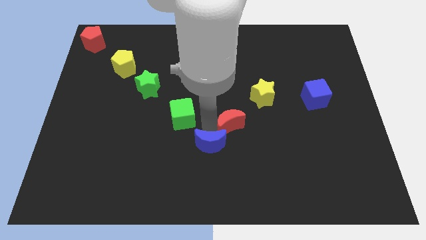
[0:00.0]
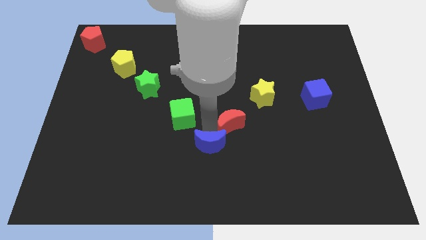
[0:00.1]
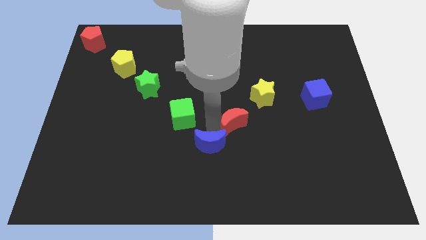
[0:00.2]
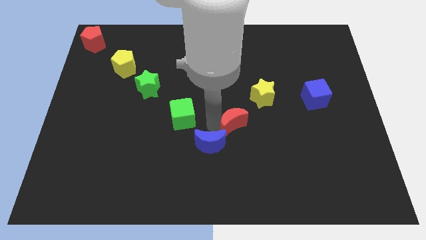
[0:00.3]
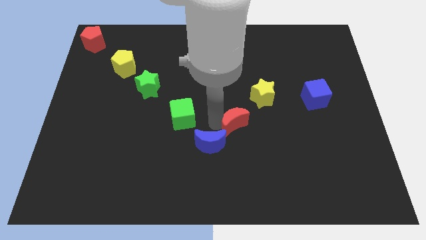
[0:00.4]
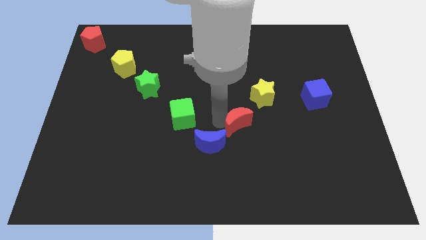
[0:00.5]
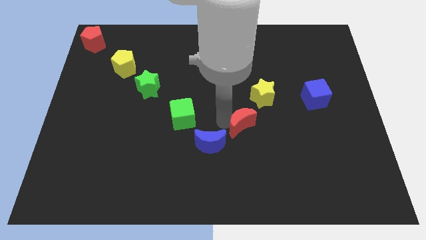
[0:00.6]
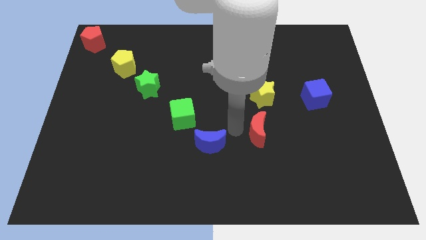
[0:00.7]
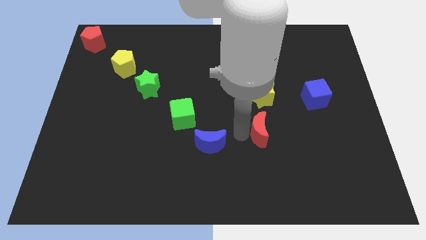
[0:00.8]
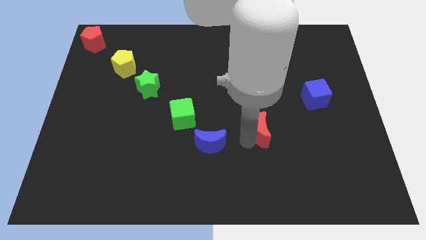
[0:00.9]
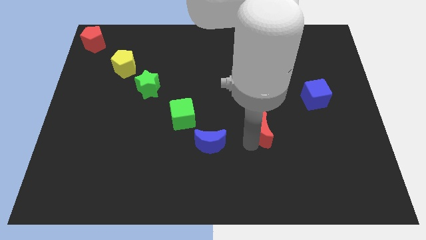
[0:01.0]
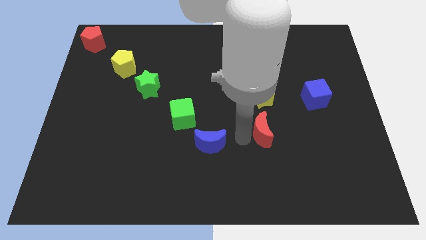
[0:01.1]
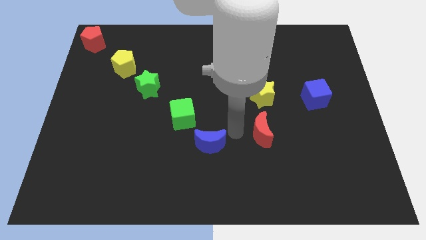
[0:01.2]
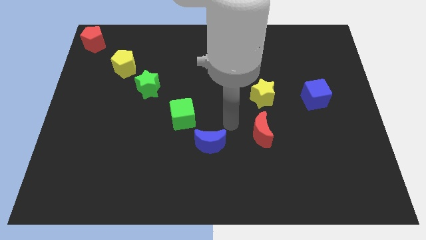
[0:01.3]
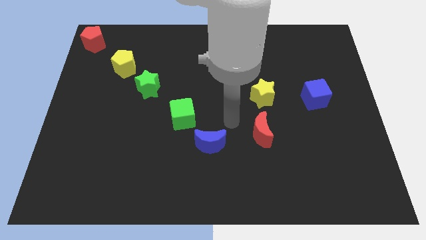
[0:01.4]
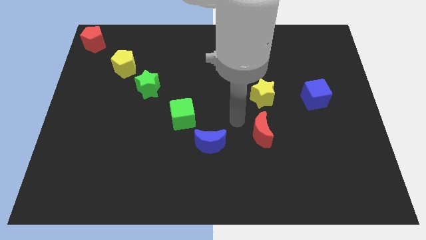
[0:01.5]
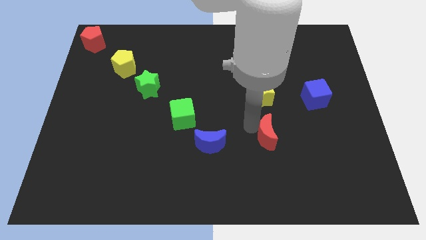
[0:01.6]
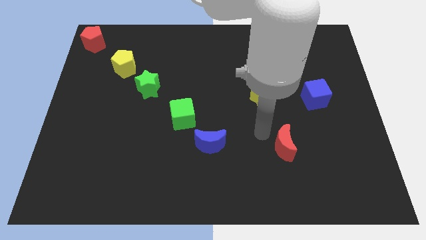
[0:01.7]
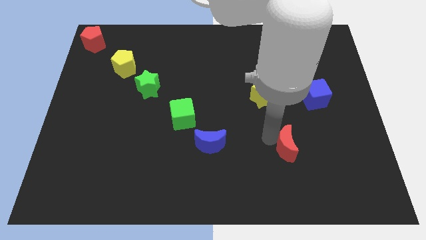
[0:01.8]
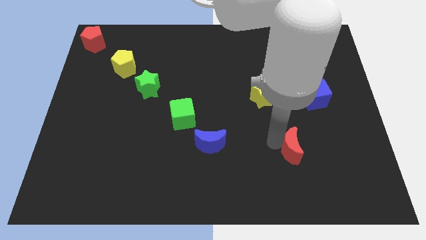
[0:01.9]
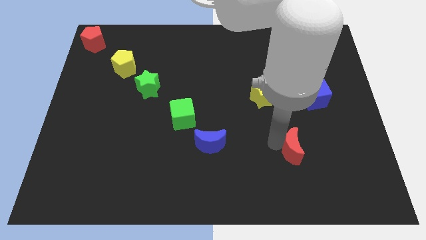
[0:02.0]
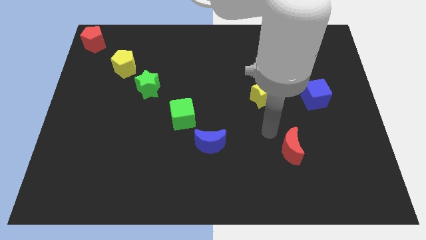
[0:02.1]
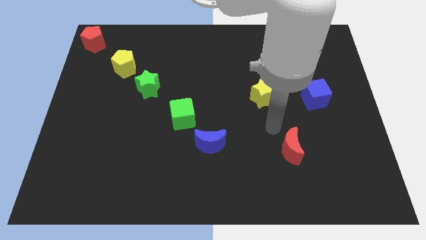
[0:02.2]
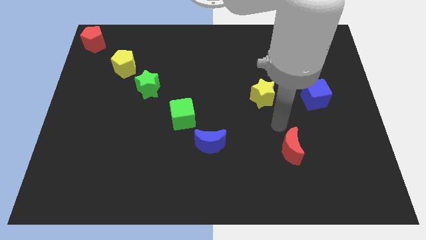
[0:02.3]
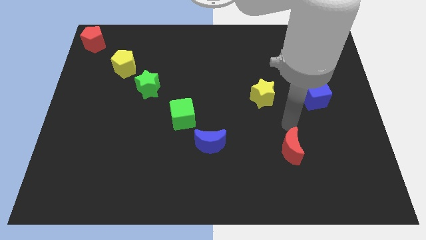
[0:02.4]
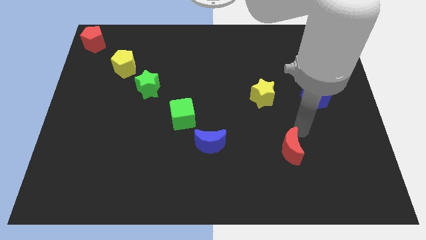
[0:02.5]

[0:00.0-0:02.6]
push the red crescent to the bottom right of the yellow star

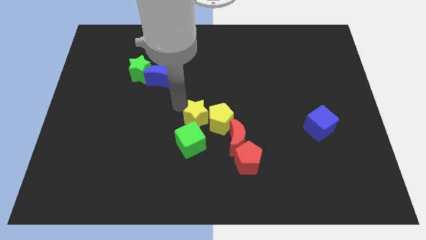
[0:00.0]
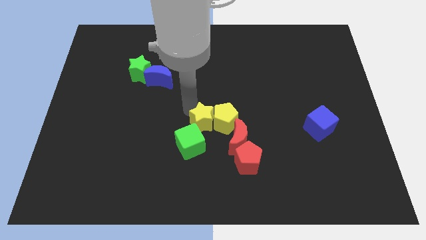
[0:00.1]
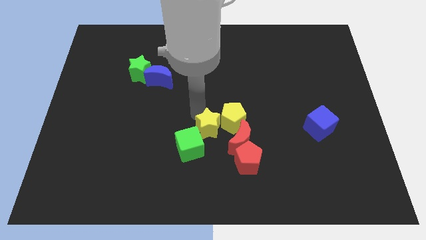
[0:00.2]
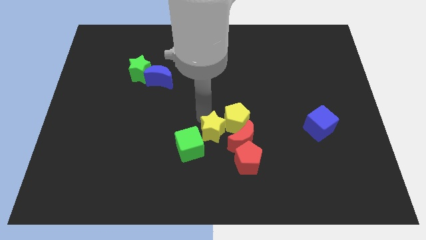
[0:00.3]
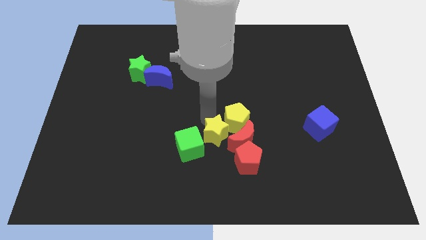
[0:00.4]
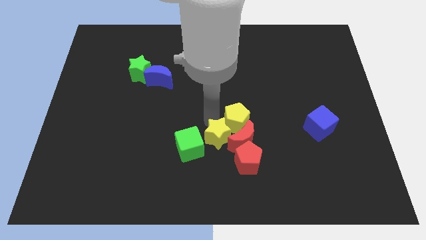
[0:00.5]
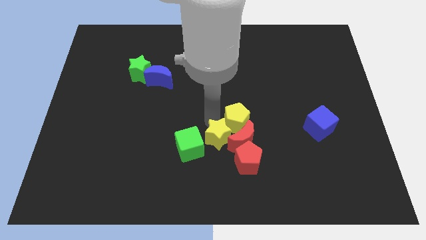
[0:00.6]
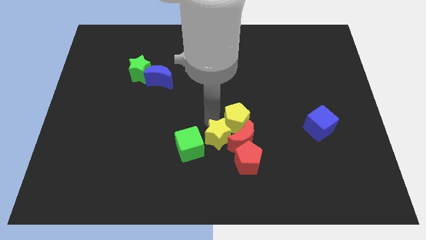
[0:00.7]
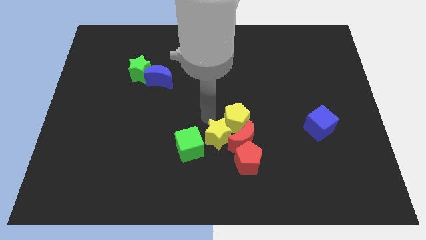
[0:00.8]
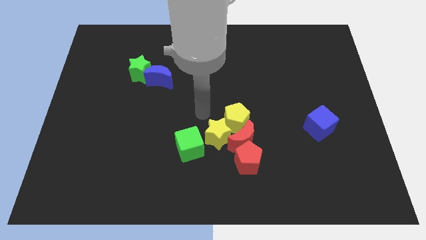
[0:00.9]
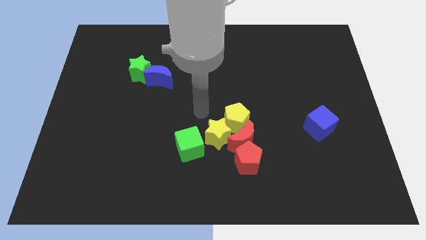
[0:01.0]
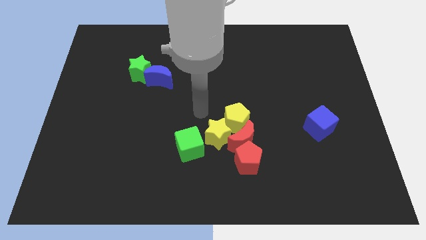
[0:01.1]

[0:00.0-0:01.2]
place yellow star between yellow pentagon and green cube

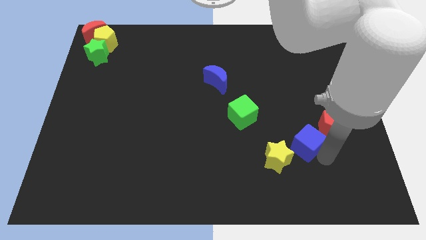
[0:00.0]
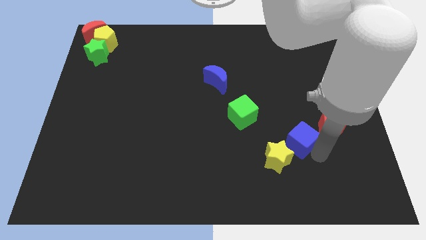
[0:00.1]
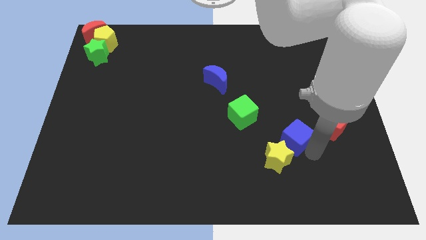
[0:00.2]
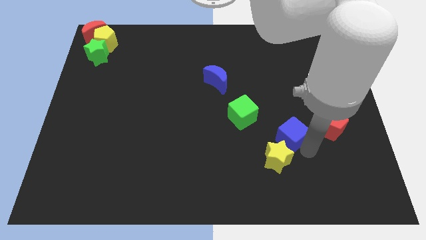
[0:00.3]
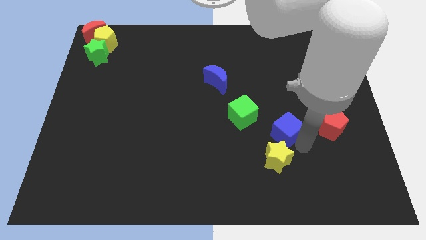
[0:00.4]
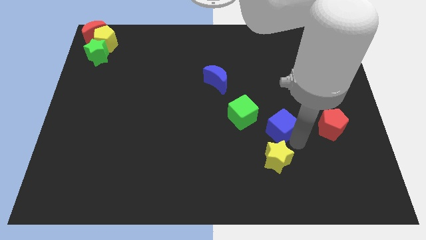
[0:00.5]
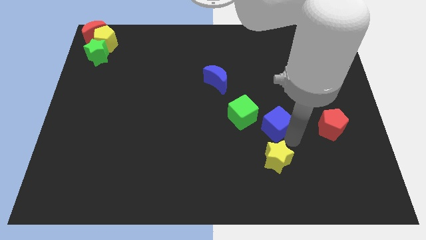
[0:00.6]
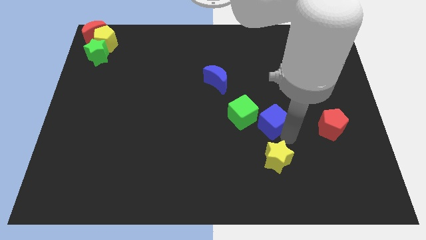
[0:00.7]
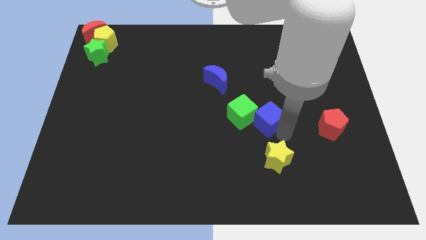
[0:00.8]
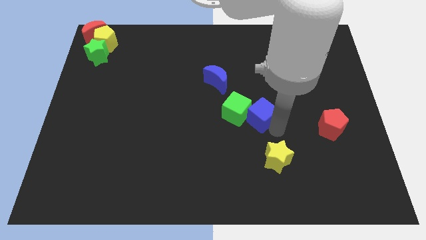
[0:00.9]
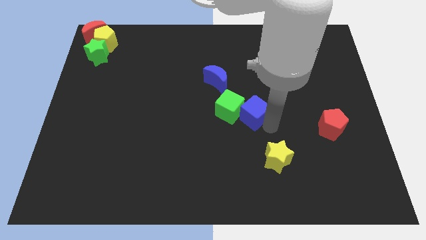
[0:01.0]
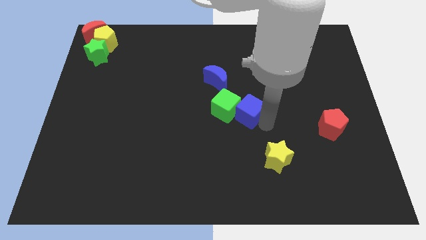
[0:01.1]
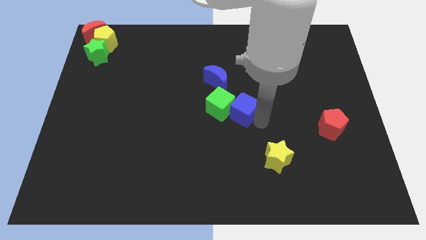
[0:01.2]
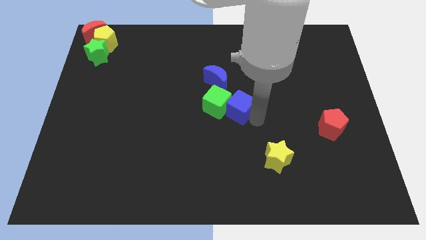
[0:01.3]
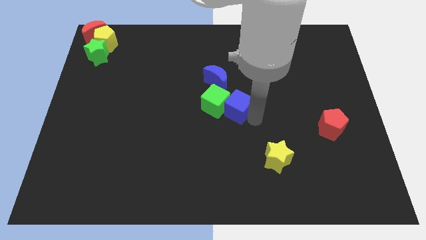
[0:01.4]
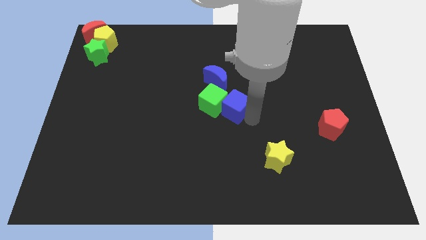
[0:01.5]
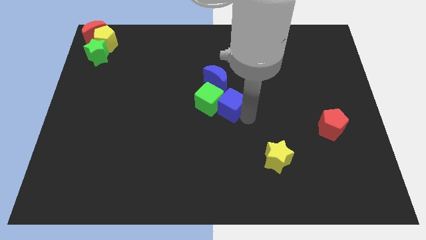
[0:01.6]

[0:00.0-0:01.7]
move the blue cube into the green cube

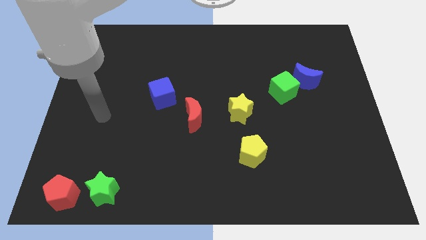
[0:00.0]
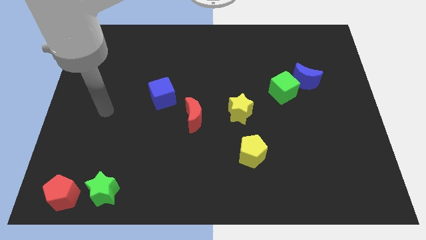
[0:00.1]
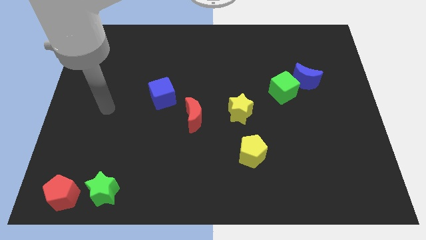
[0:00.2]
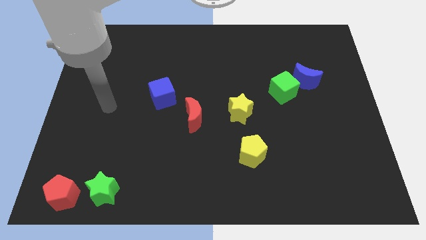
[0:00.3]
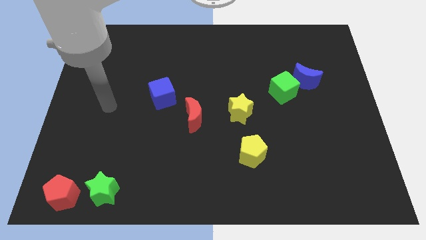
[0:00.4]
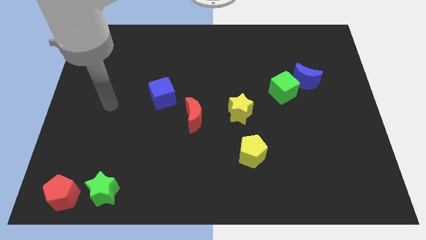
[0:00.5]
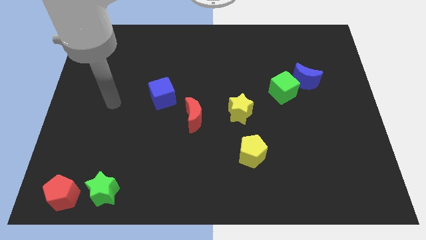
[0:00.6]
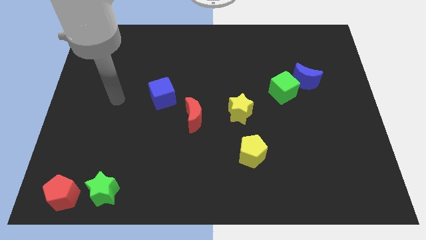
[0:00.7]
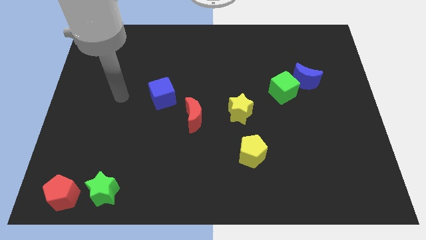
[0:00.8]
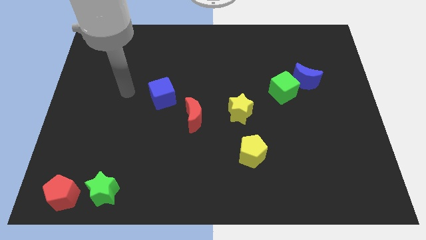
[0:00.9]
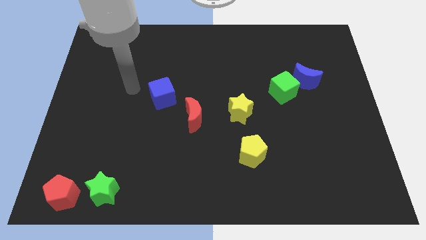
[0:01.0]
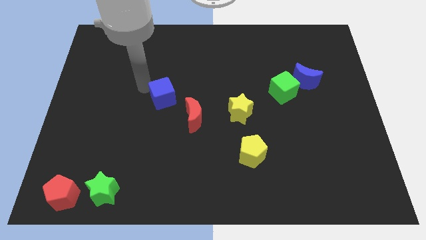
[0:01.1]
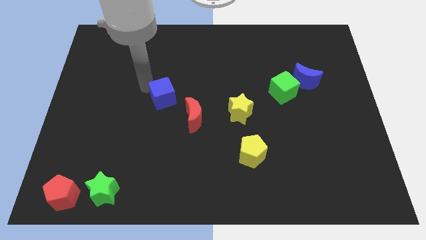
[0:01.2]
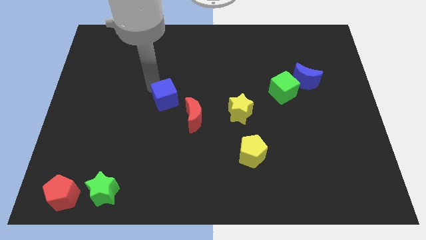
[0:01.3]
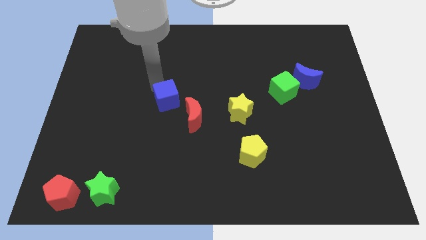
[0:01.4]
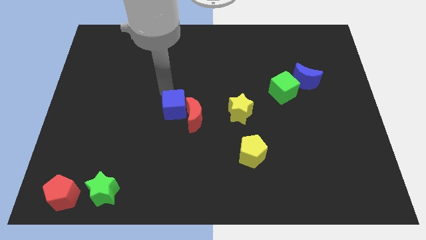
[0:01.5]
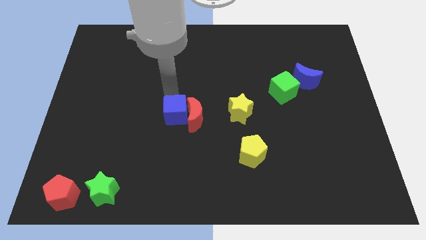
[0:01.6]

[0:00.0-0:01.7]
push the blue cube into red crescent

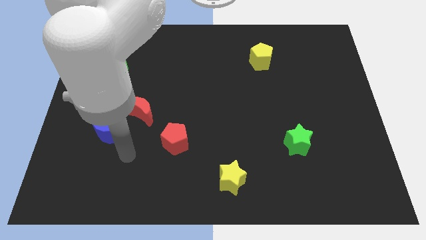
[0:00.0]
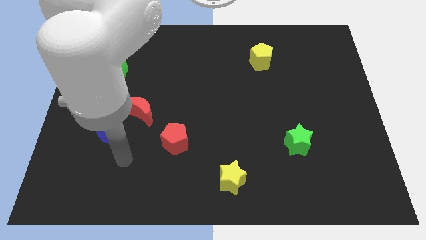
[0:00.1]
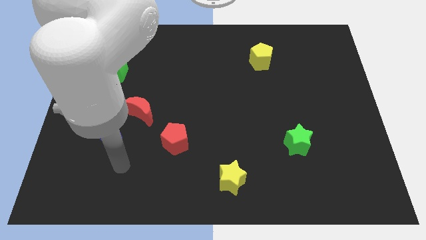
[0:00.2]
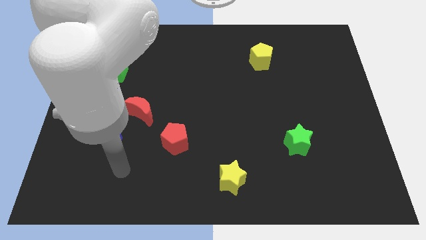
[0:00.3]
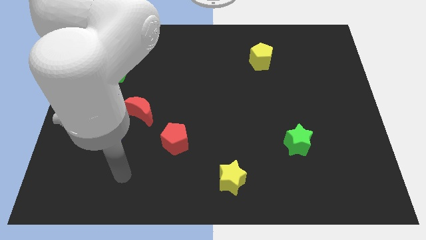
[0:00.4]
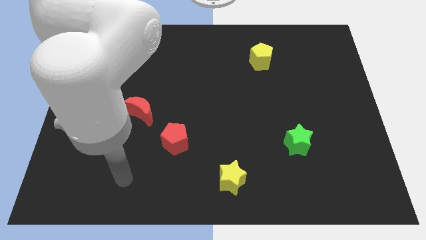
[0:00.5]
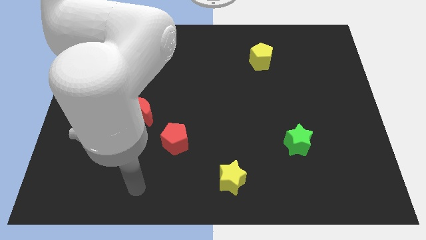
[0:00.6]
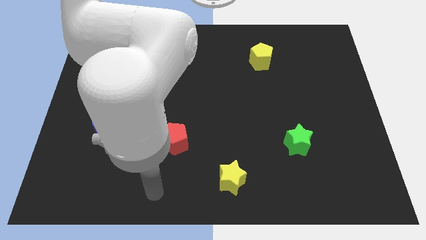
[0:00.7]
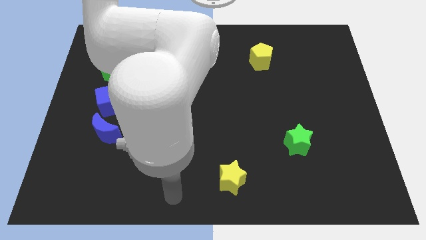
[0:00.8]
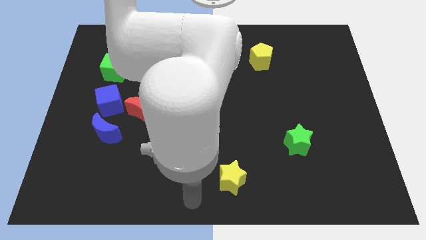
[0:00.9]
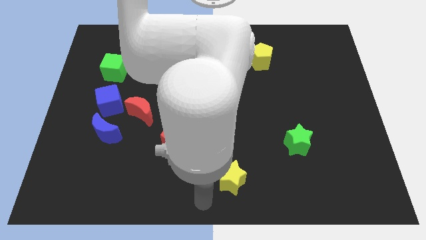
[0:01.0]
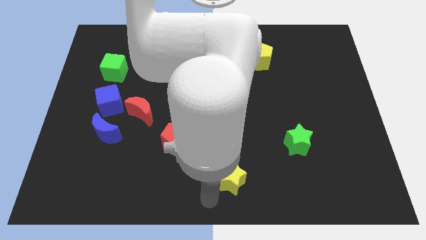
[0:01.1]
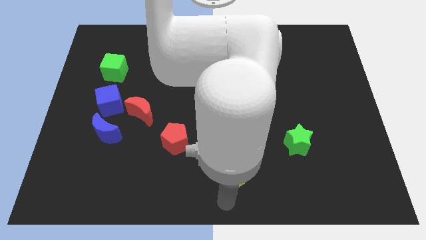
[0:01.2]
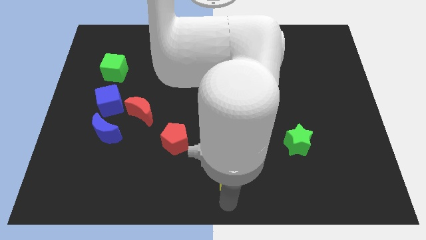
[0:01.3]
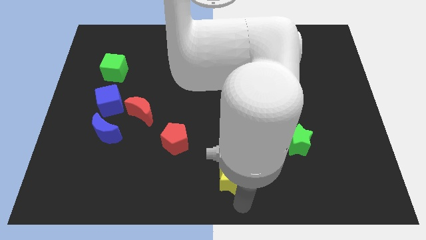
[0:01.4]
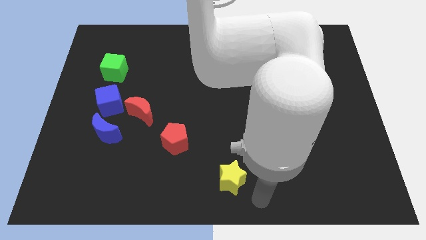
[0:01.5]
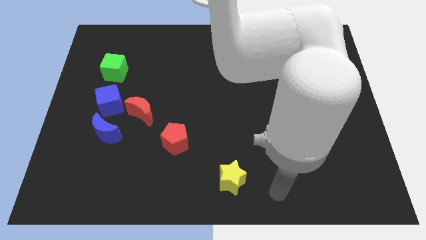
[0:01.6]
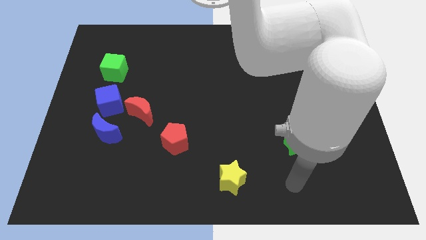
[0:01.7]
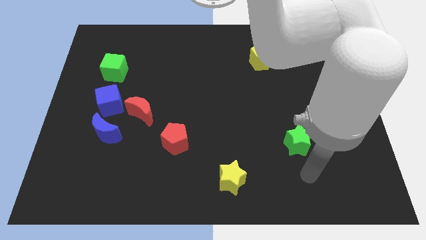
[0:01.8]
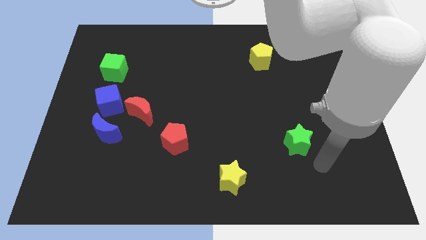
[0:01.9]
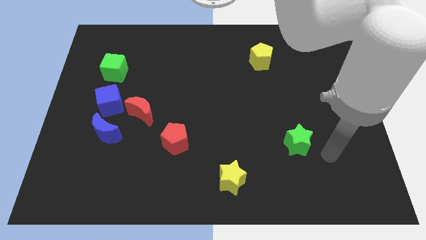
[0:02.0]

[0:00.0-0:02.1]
move the arm from the bottom center to the right side
